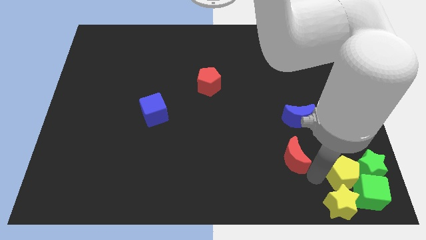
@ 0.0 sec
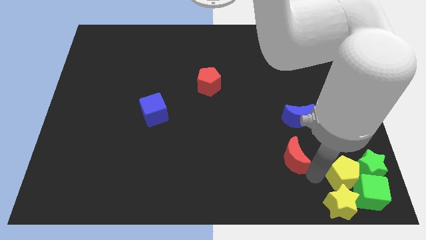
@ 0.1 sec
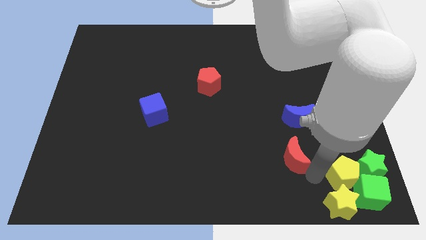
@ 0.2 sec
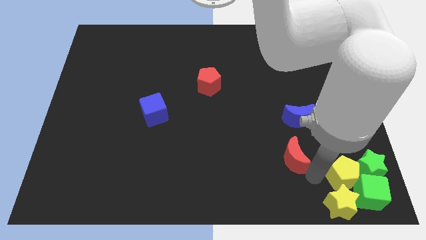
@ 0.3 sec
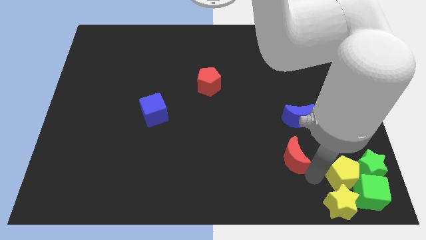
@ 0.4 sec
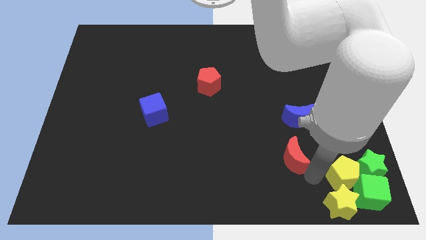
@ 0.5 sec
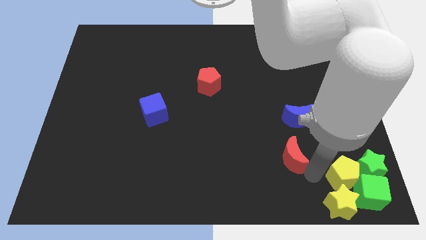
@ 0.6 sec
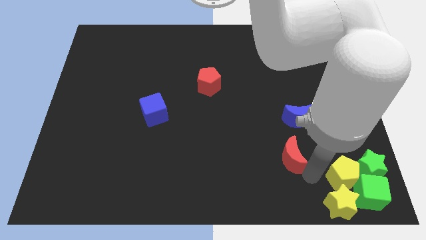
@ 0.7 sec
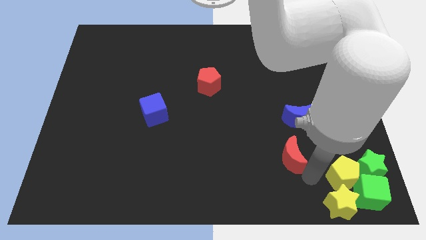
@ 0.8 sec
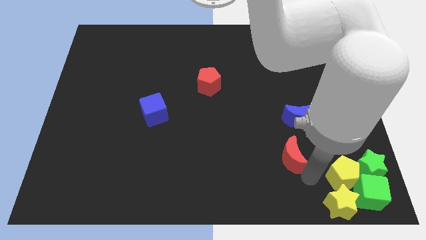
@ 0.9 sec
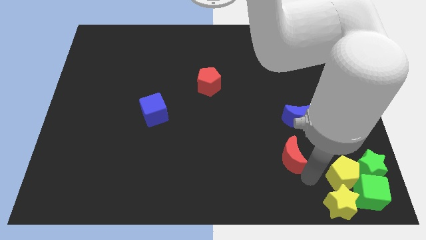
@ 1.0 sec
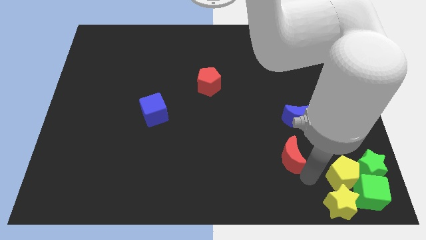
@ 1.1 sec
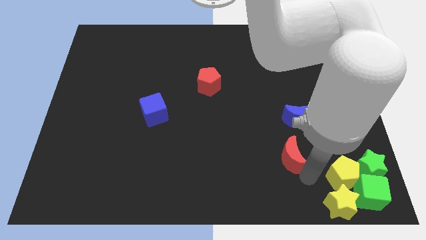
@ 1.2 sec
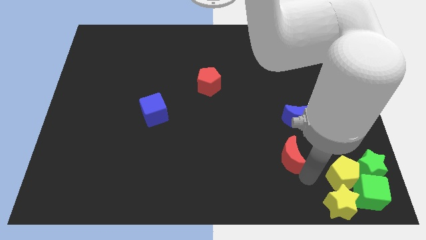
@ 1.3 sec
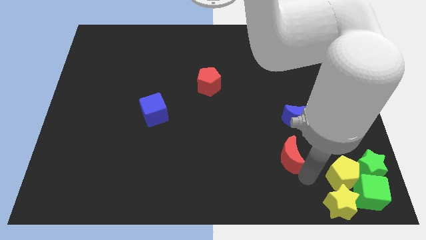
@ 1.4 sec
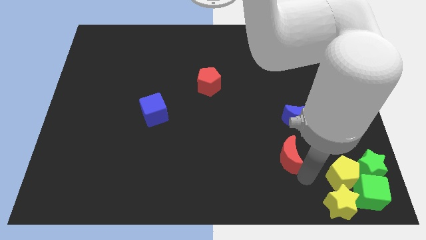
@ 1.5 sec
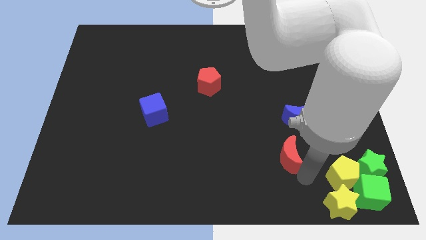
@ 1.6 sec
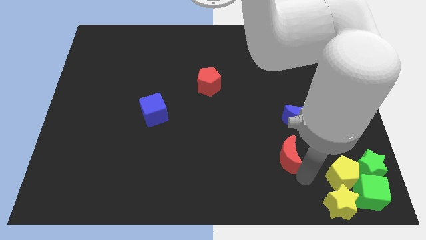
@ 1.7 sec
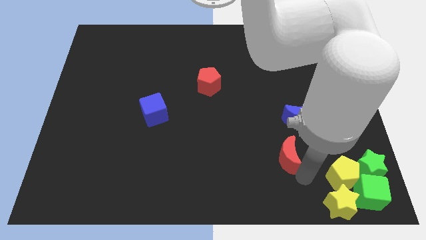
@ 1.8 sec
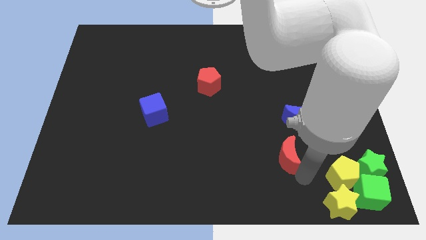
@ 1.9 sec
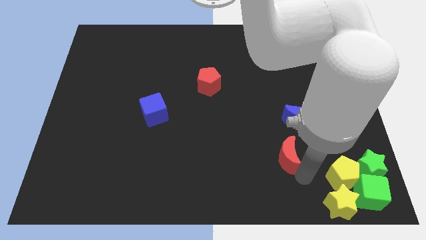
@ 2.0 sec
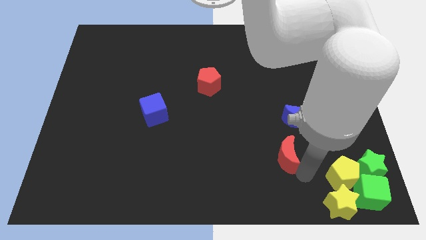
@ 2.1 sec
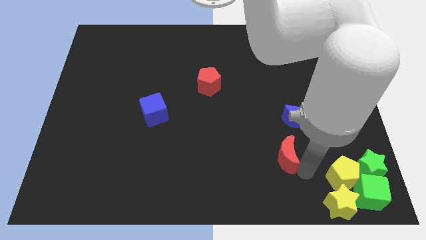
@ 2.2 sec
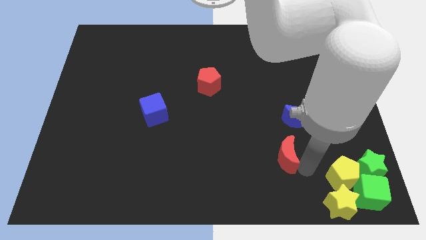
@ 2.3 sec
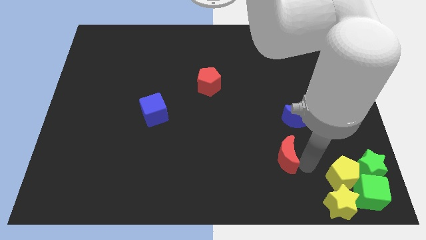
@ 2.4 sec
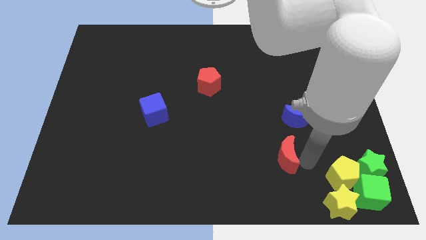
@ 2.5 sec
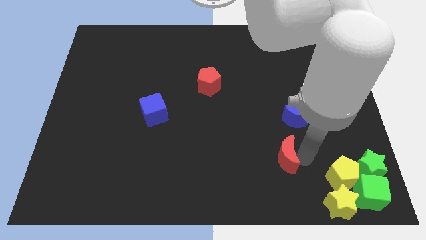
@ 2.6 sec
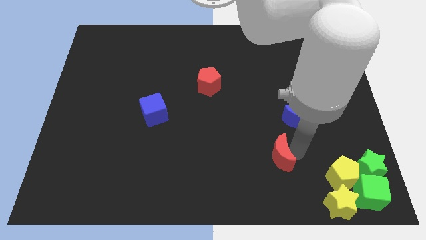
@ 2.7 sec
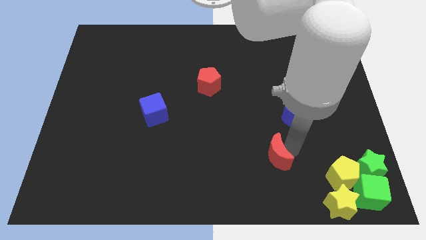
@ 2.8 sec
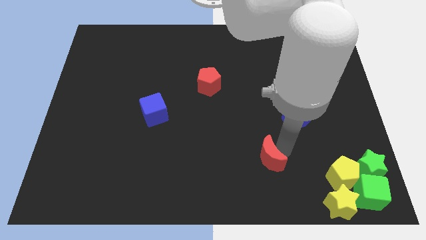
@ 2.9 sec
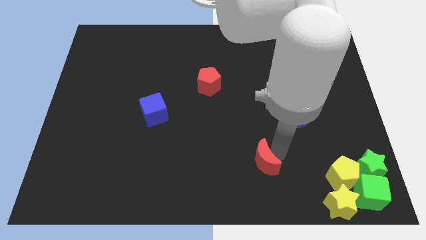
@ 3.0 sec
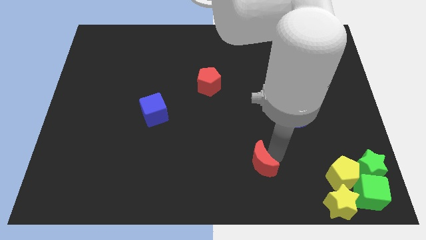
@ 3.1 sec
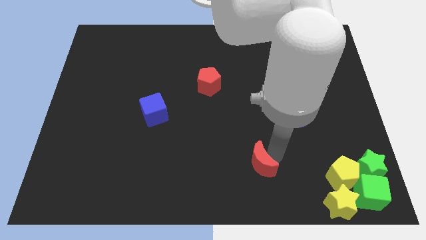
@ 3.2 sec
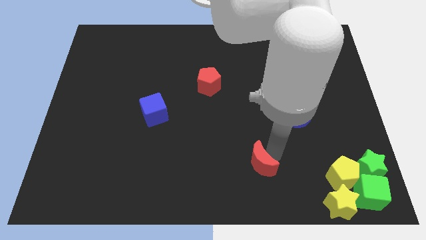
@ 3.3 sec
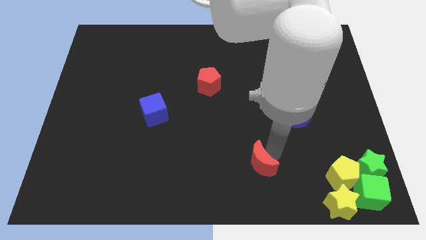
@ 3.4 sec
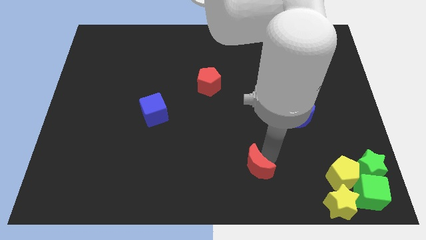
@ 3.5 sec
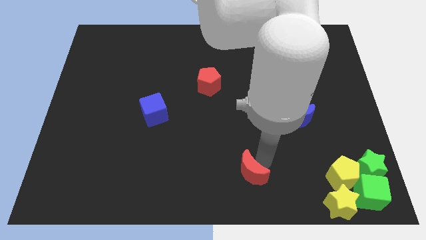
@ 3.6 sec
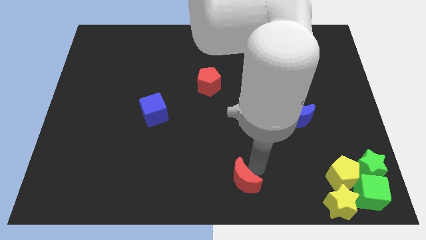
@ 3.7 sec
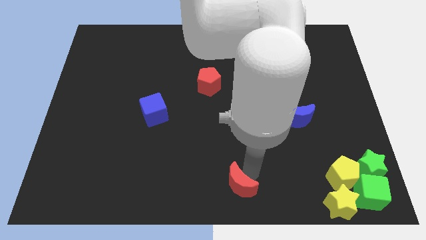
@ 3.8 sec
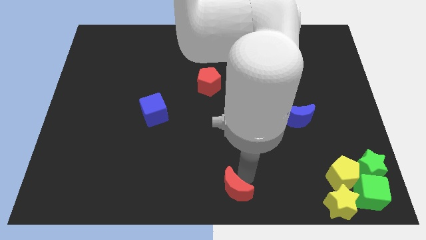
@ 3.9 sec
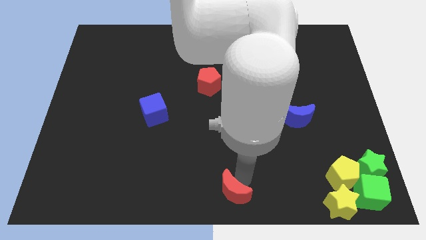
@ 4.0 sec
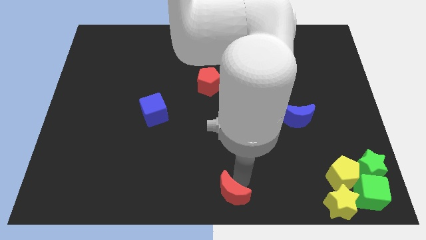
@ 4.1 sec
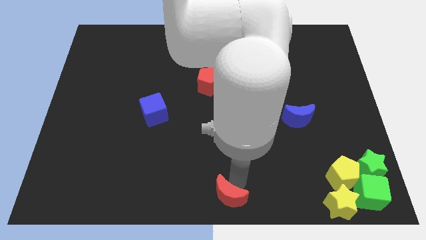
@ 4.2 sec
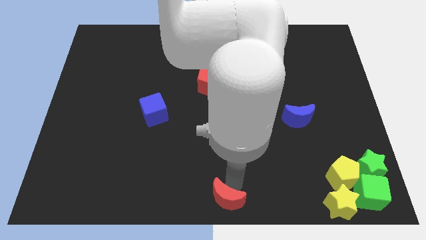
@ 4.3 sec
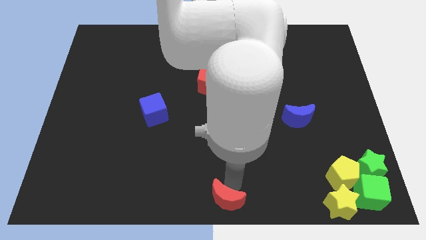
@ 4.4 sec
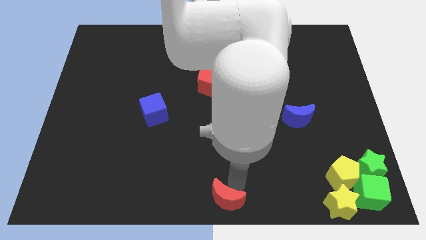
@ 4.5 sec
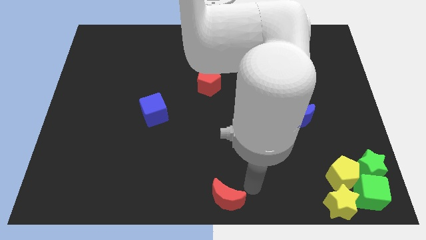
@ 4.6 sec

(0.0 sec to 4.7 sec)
move the red moon to the bottom center

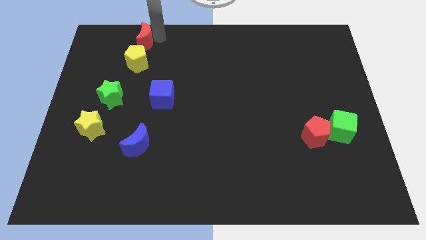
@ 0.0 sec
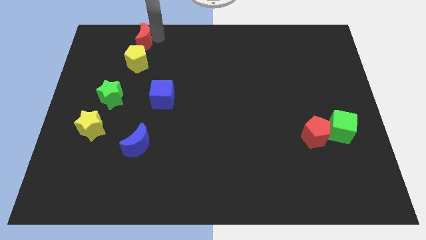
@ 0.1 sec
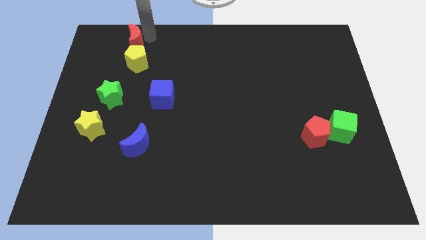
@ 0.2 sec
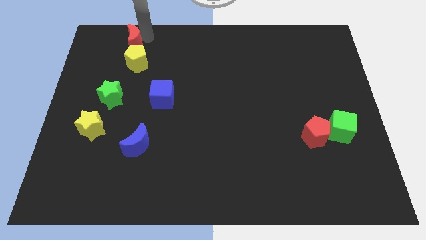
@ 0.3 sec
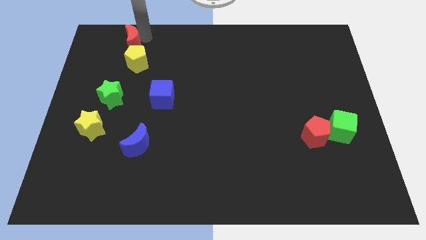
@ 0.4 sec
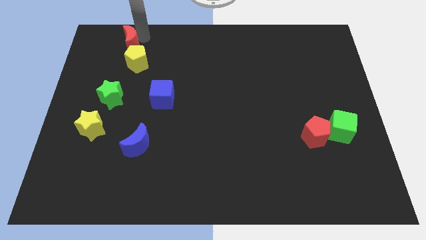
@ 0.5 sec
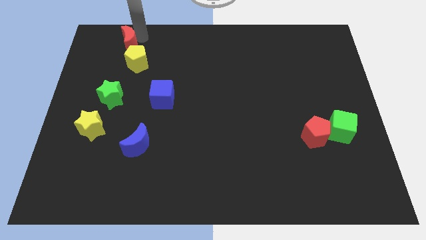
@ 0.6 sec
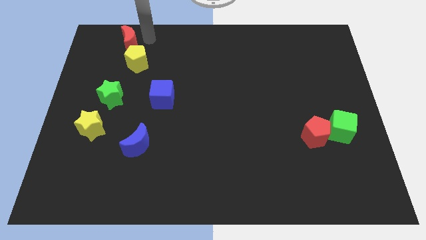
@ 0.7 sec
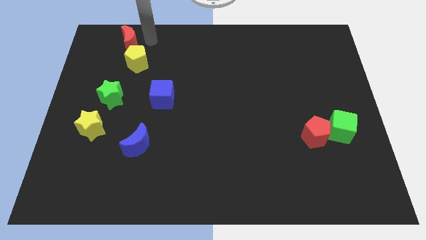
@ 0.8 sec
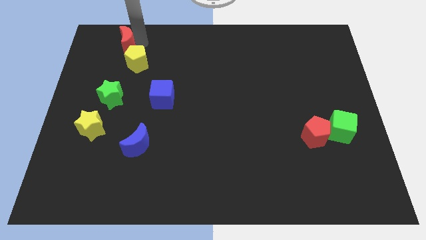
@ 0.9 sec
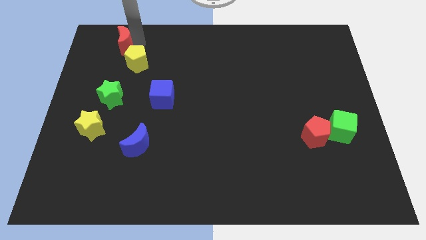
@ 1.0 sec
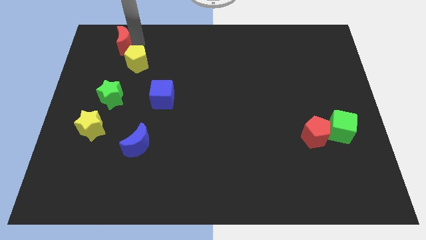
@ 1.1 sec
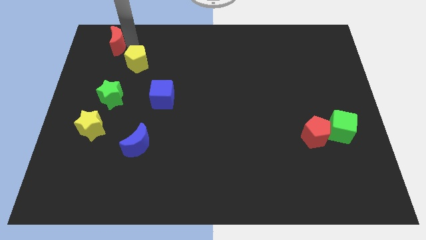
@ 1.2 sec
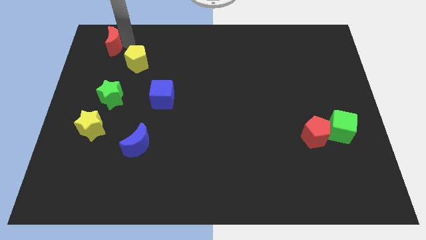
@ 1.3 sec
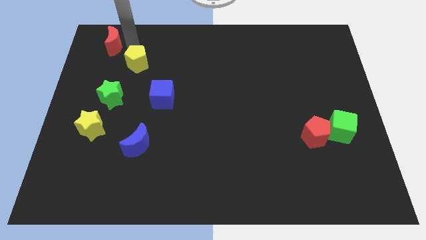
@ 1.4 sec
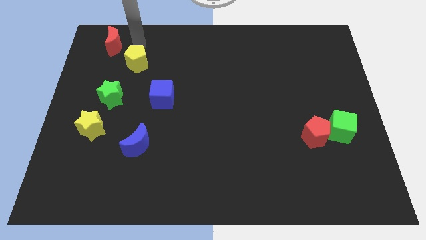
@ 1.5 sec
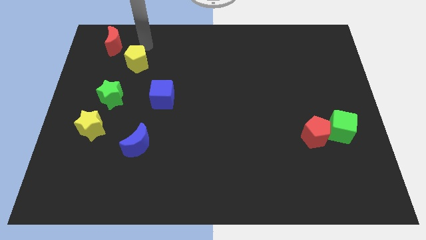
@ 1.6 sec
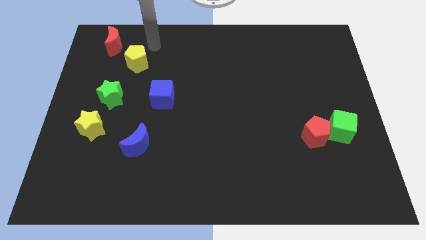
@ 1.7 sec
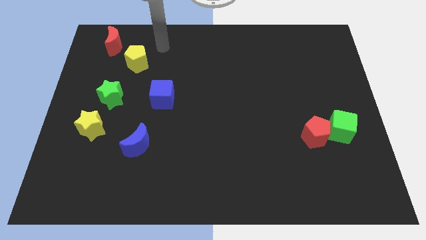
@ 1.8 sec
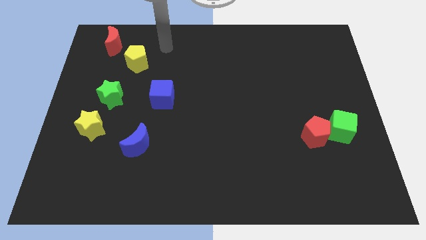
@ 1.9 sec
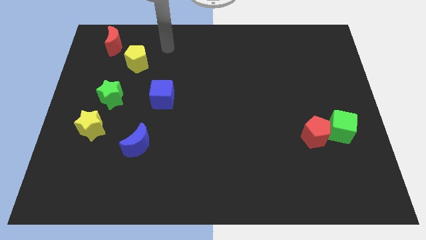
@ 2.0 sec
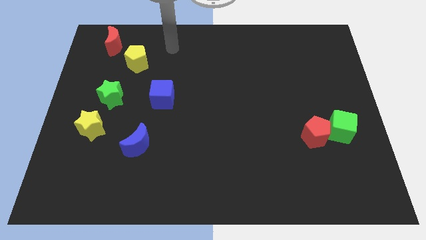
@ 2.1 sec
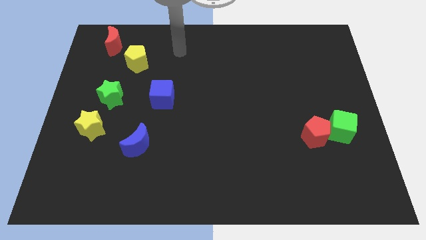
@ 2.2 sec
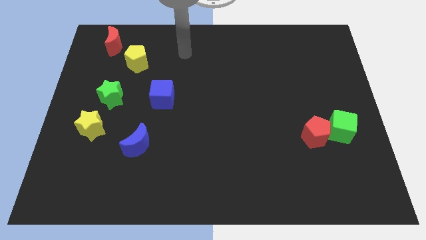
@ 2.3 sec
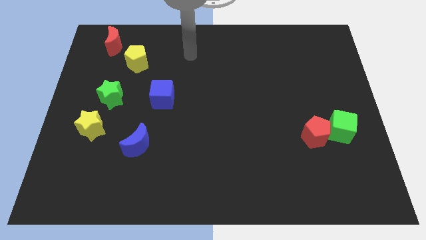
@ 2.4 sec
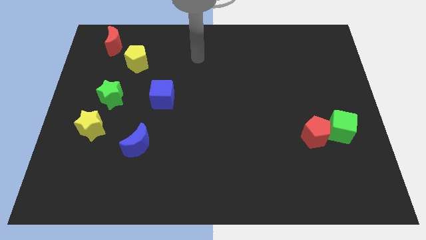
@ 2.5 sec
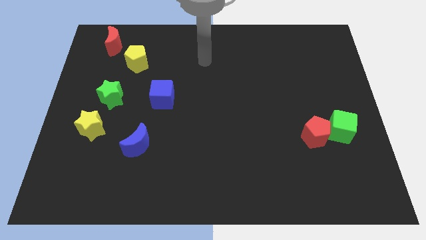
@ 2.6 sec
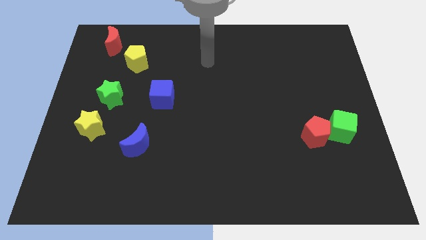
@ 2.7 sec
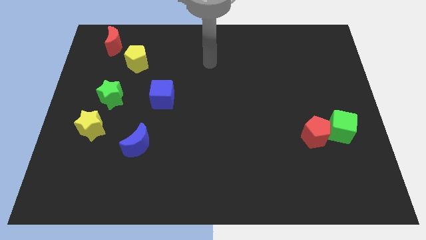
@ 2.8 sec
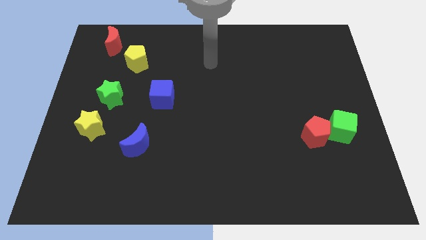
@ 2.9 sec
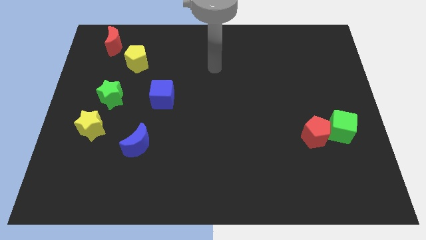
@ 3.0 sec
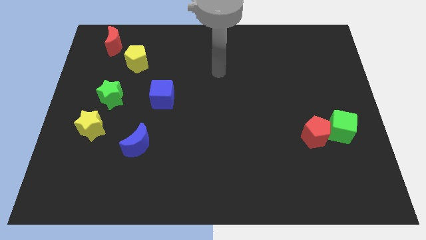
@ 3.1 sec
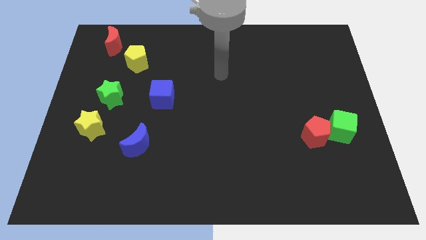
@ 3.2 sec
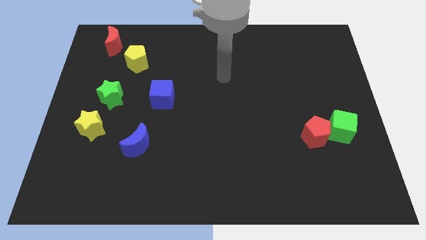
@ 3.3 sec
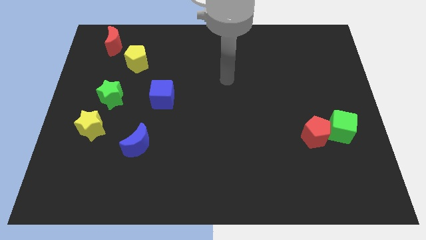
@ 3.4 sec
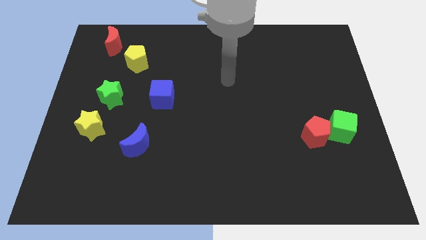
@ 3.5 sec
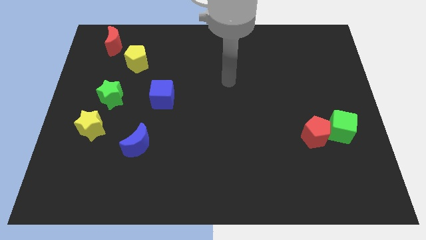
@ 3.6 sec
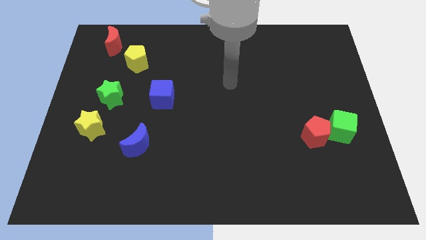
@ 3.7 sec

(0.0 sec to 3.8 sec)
place the red crescent diagonally top left to the yellow pentagon

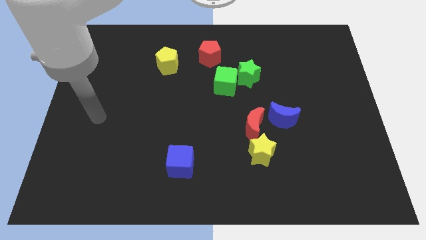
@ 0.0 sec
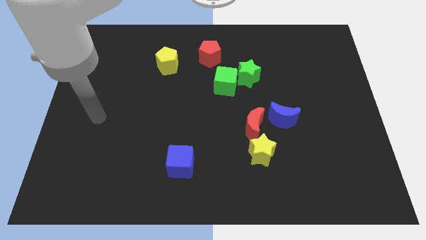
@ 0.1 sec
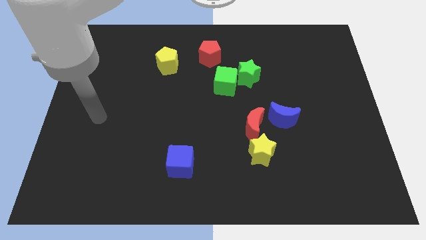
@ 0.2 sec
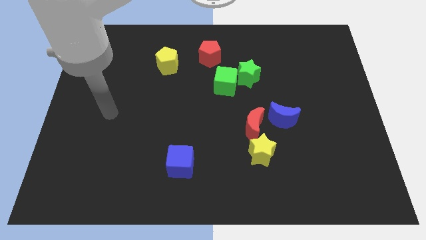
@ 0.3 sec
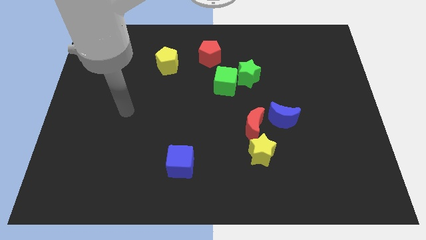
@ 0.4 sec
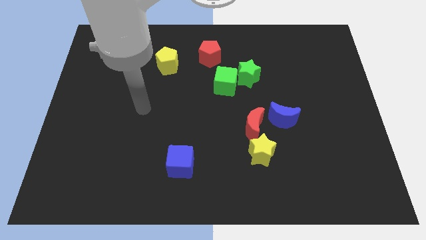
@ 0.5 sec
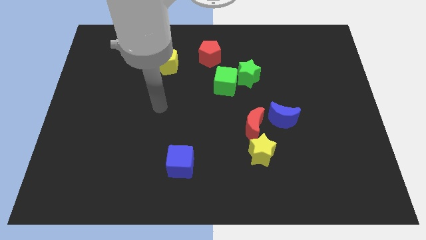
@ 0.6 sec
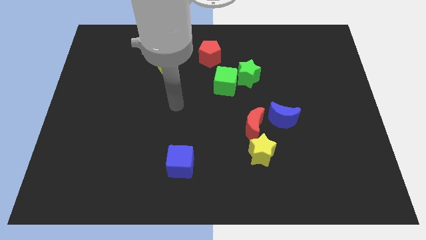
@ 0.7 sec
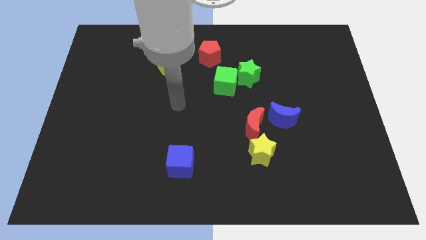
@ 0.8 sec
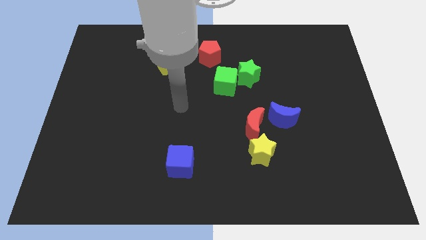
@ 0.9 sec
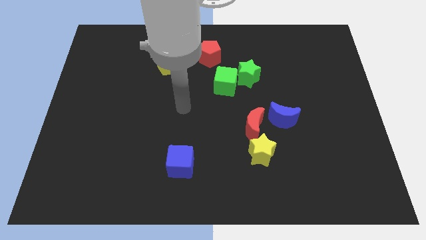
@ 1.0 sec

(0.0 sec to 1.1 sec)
put your arm vertically above the blue cube
